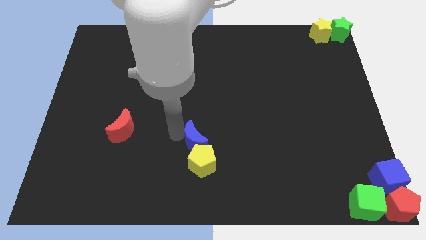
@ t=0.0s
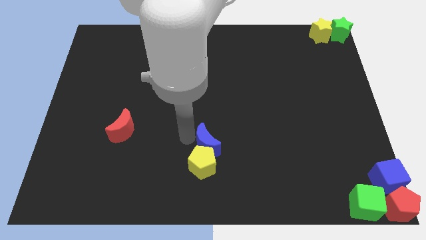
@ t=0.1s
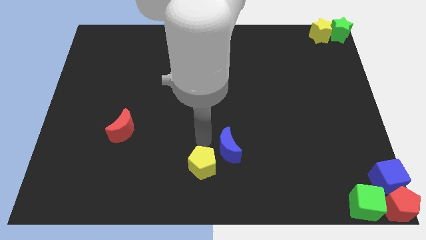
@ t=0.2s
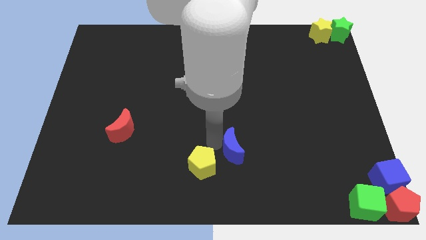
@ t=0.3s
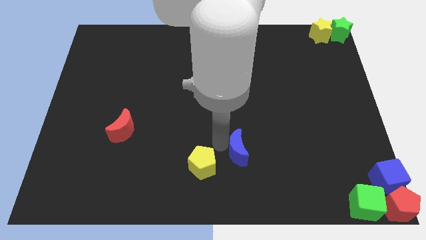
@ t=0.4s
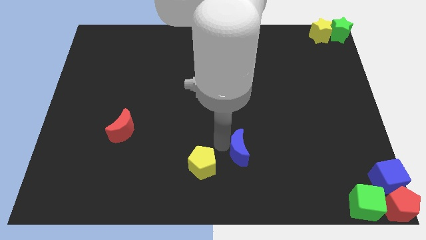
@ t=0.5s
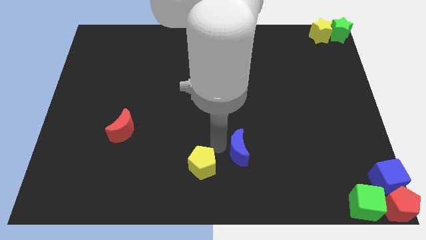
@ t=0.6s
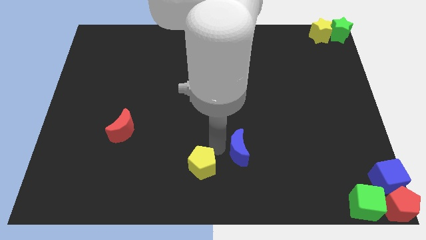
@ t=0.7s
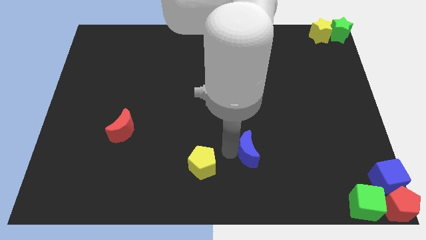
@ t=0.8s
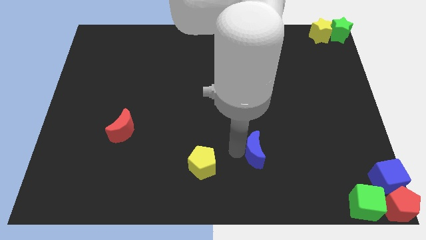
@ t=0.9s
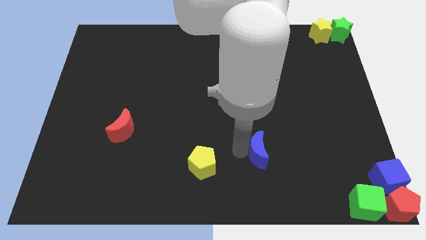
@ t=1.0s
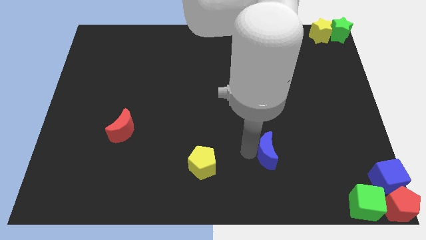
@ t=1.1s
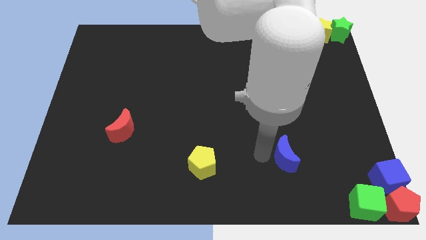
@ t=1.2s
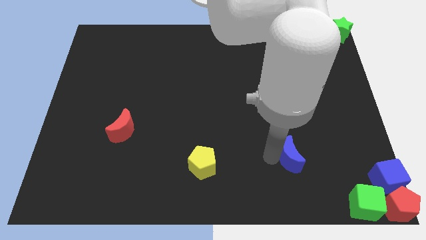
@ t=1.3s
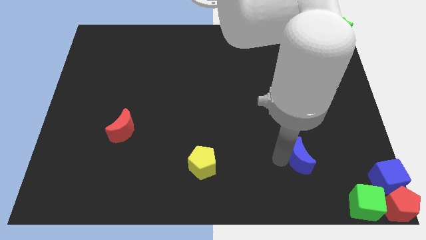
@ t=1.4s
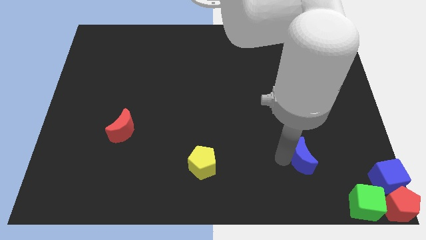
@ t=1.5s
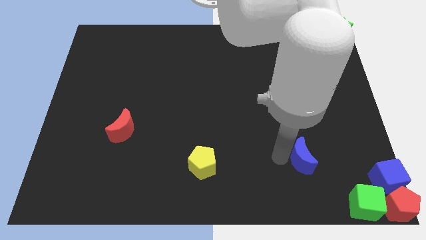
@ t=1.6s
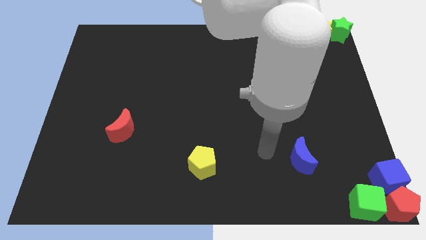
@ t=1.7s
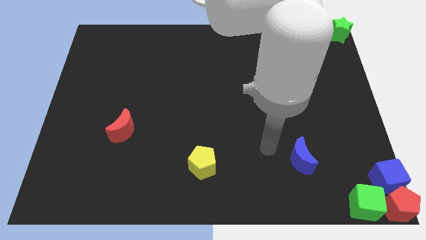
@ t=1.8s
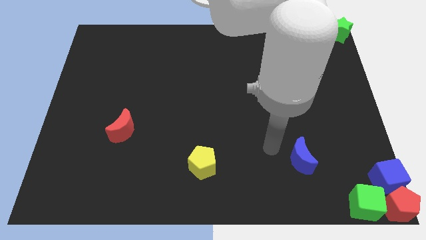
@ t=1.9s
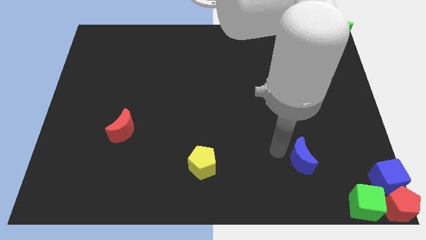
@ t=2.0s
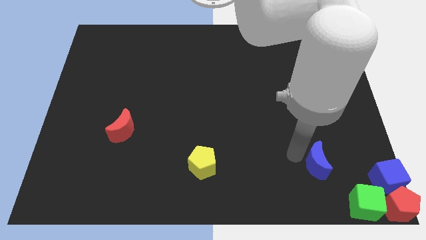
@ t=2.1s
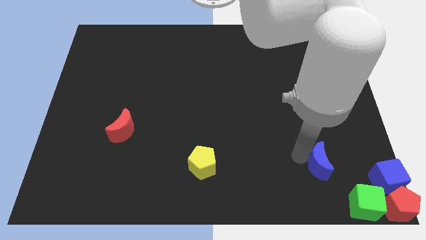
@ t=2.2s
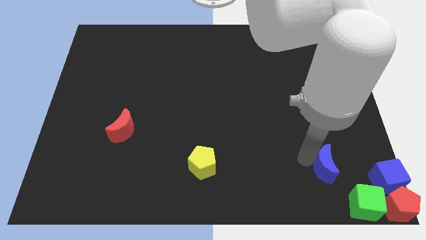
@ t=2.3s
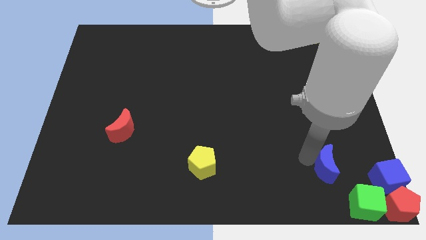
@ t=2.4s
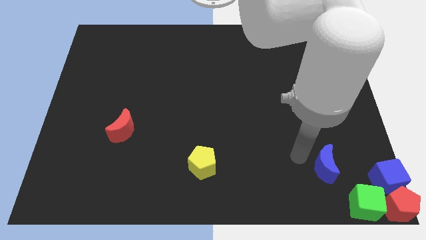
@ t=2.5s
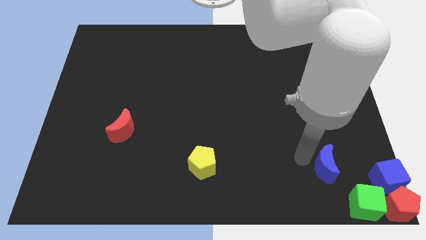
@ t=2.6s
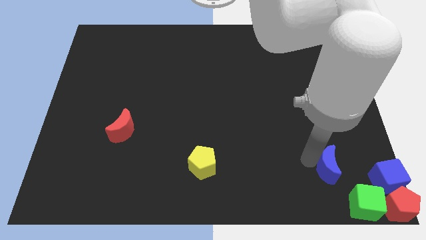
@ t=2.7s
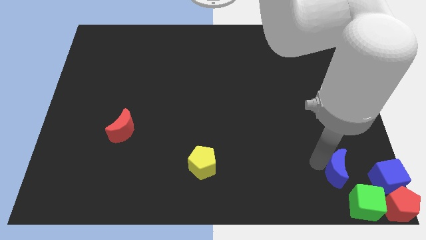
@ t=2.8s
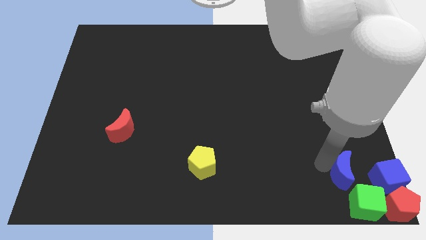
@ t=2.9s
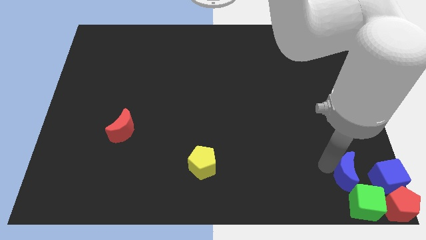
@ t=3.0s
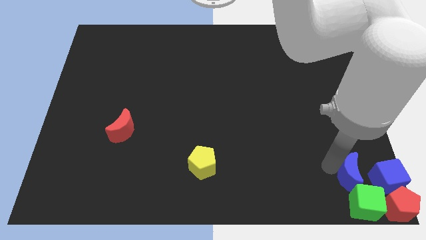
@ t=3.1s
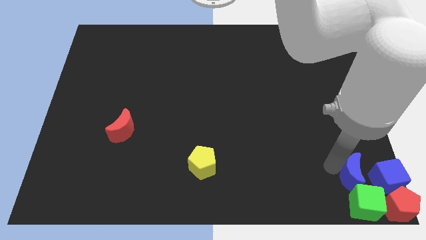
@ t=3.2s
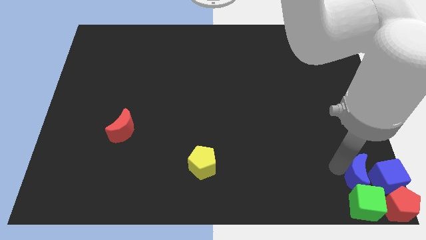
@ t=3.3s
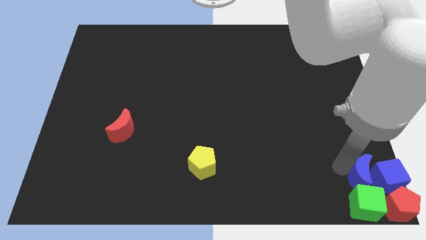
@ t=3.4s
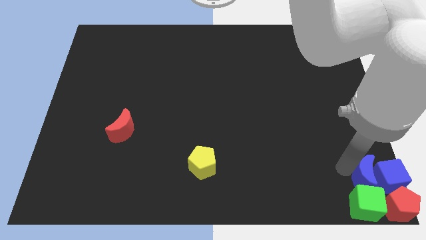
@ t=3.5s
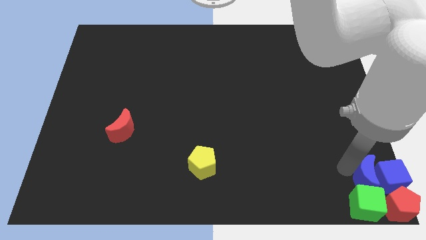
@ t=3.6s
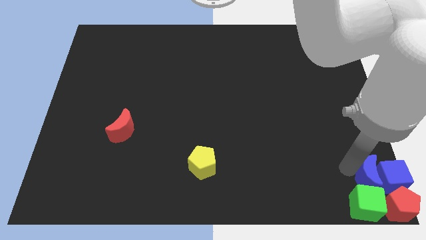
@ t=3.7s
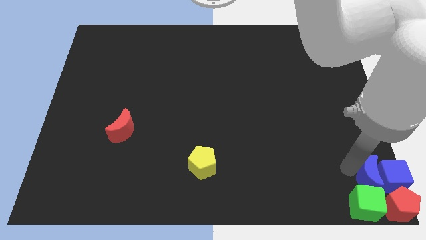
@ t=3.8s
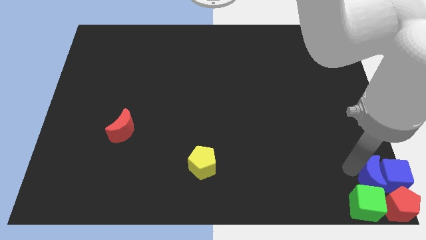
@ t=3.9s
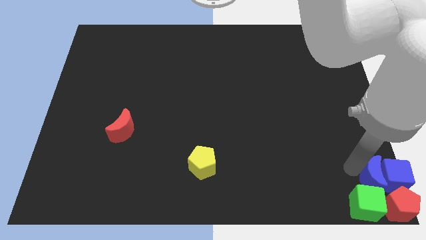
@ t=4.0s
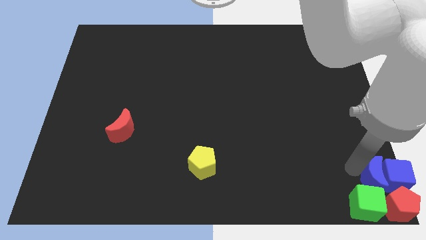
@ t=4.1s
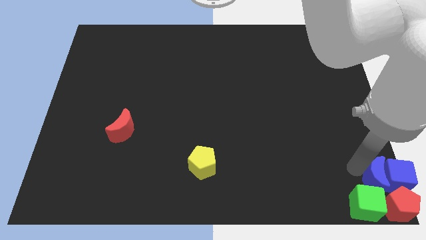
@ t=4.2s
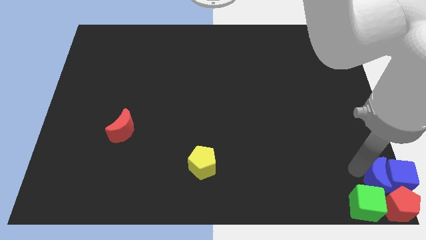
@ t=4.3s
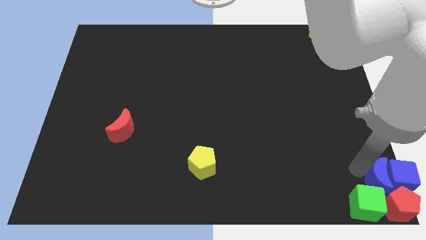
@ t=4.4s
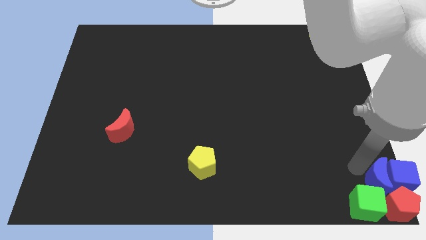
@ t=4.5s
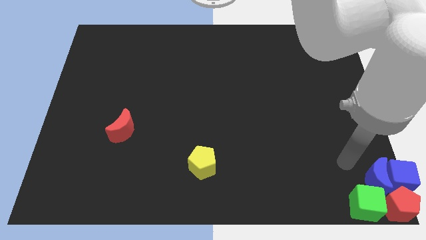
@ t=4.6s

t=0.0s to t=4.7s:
push the blue moon into the blue cube

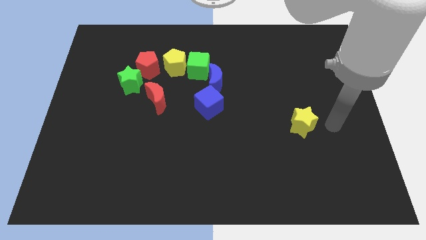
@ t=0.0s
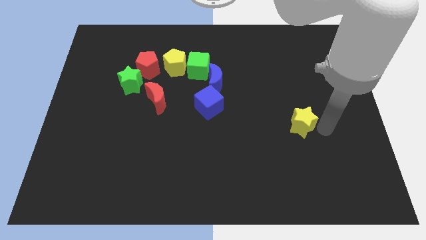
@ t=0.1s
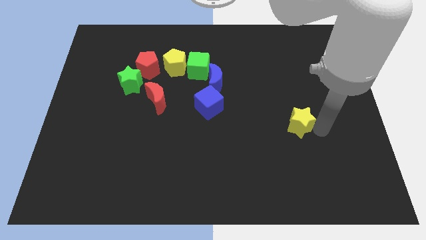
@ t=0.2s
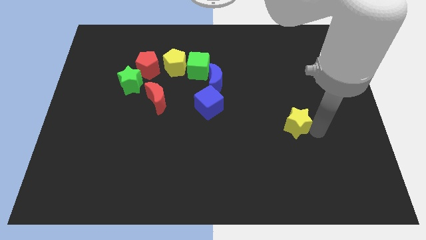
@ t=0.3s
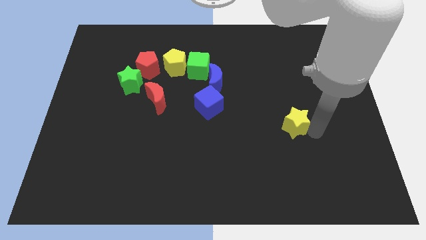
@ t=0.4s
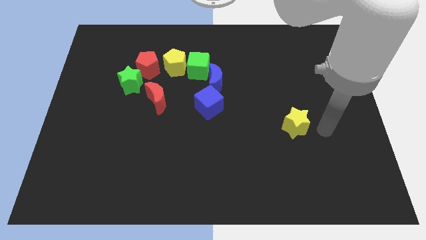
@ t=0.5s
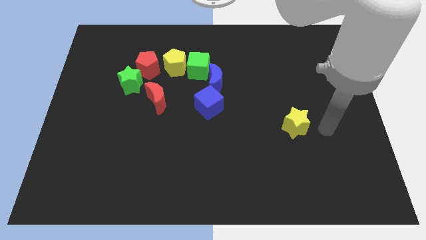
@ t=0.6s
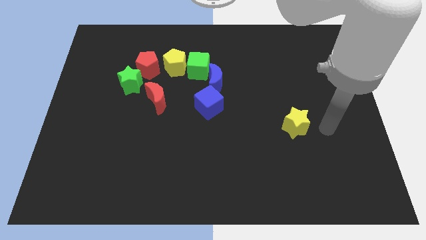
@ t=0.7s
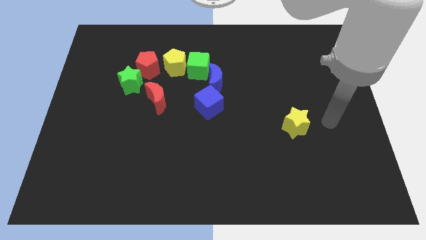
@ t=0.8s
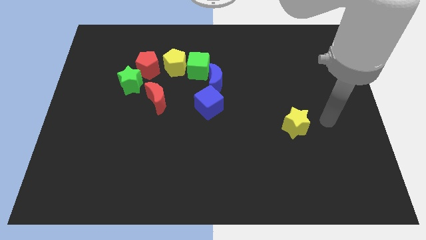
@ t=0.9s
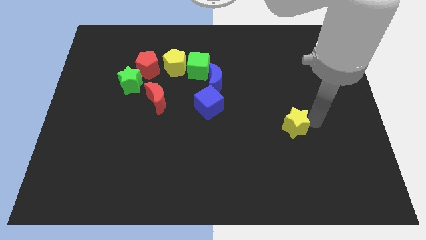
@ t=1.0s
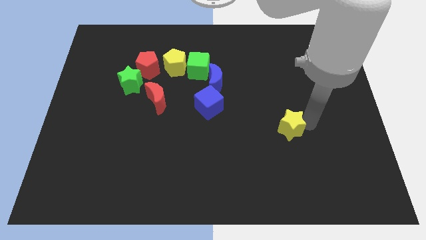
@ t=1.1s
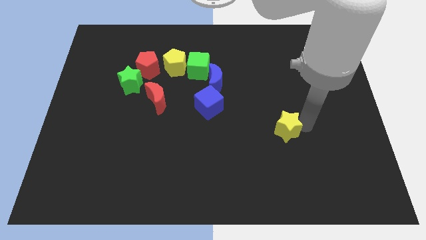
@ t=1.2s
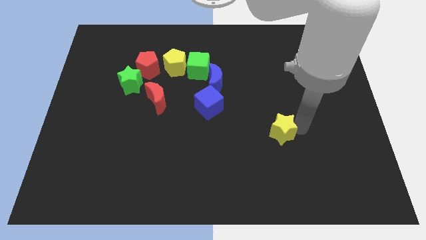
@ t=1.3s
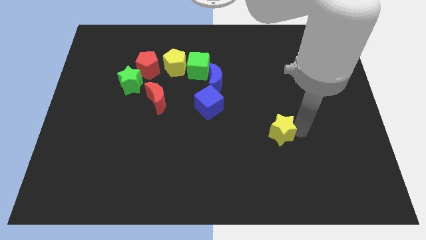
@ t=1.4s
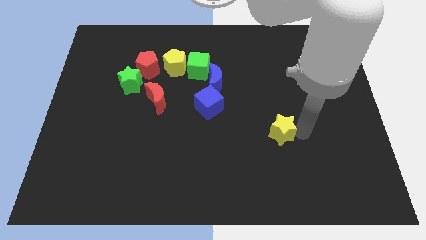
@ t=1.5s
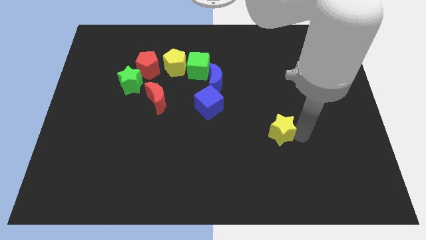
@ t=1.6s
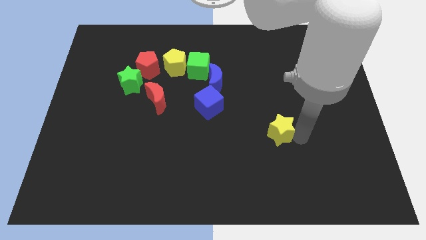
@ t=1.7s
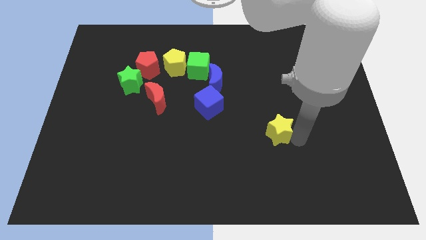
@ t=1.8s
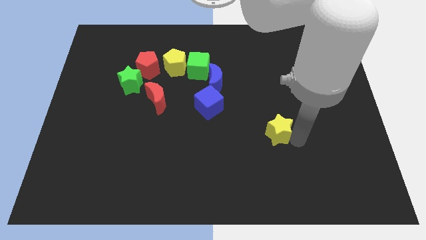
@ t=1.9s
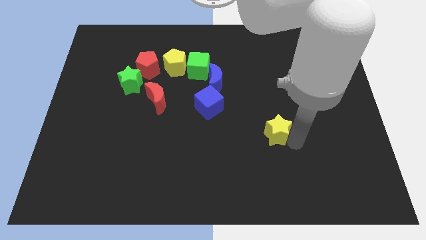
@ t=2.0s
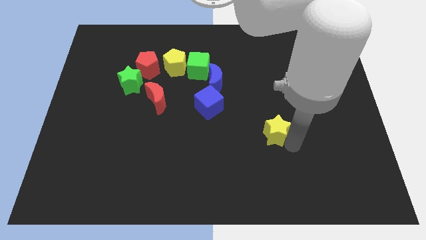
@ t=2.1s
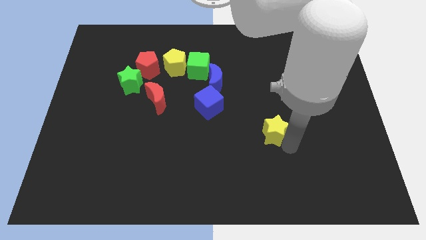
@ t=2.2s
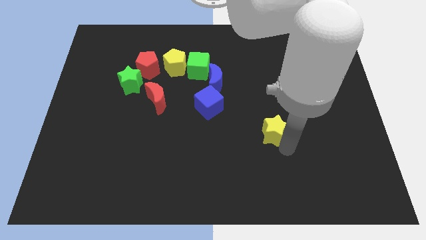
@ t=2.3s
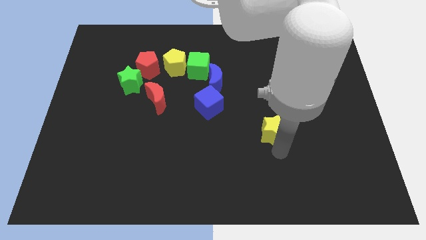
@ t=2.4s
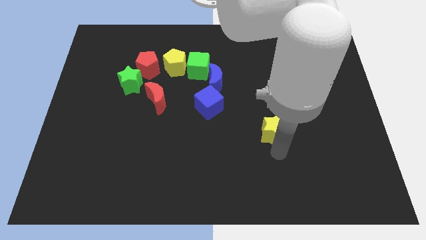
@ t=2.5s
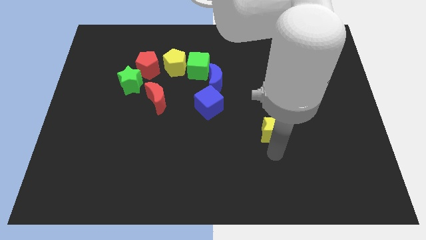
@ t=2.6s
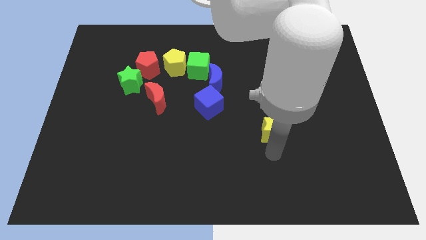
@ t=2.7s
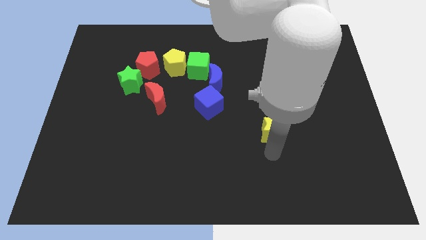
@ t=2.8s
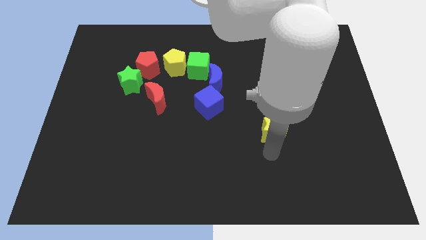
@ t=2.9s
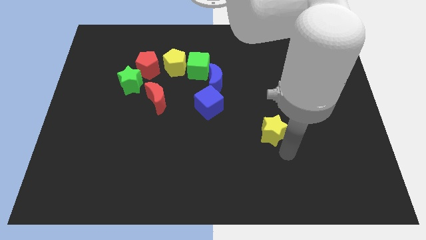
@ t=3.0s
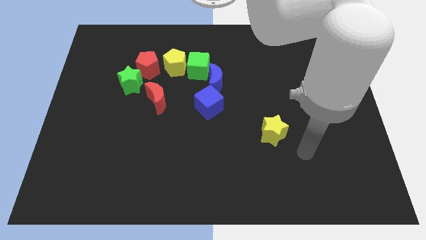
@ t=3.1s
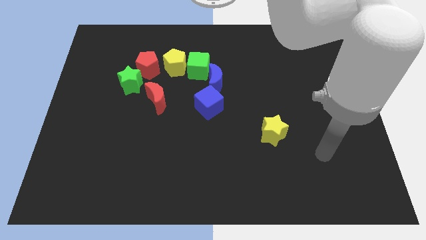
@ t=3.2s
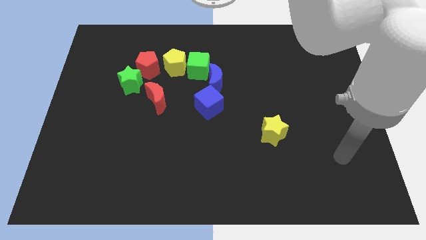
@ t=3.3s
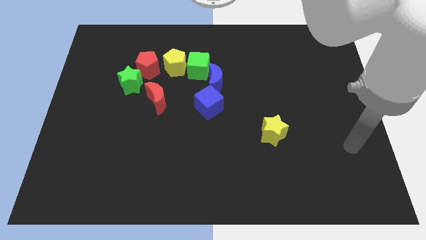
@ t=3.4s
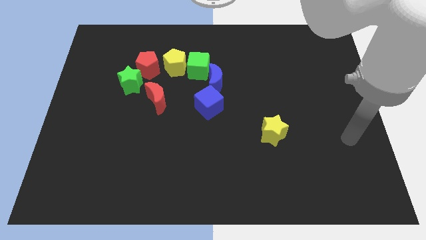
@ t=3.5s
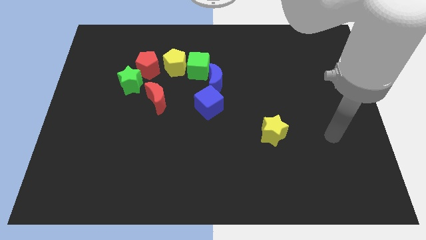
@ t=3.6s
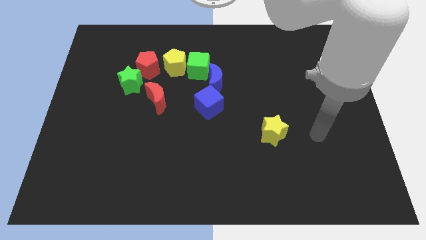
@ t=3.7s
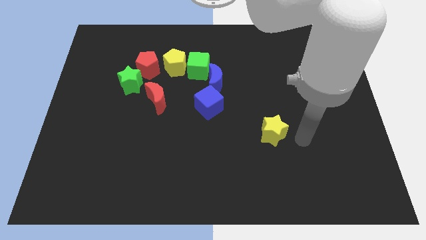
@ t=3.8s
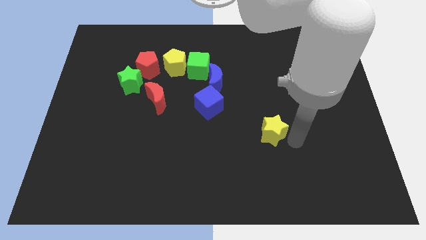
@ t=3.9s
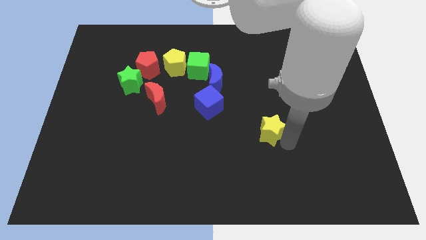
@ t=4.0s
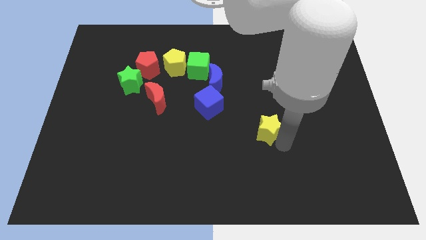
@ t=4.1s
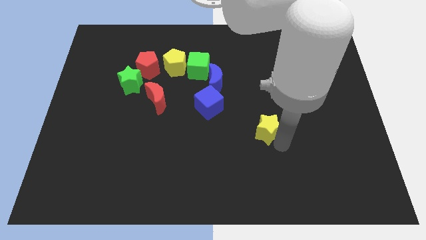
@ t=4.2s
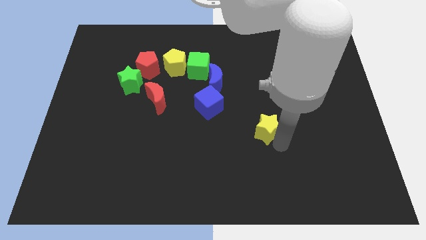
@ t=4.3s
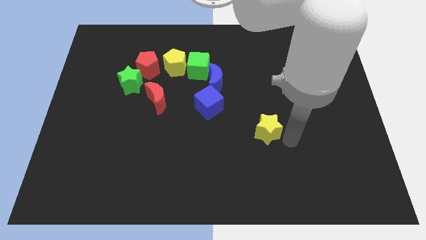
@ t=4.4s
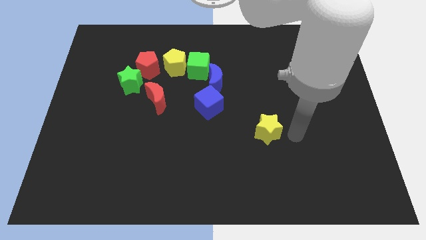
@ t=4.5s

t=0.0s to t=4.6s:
slightly move the yellow star to the left side of the board
